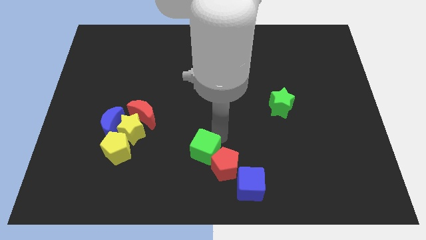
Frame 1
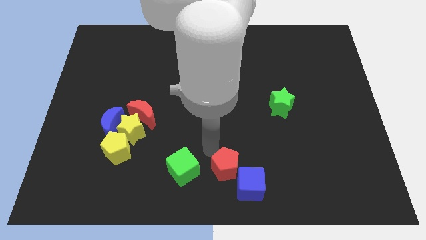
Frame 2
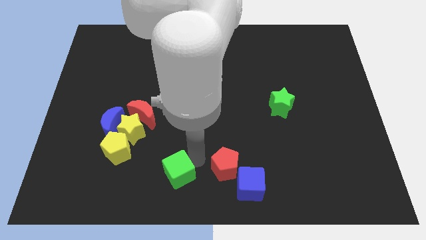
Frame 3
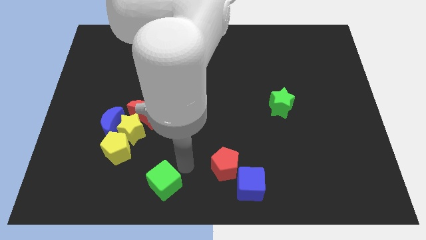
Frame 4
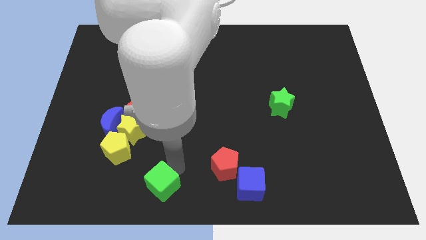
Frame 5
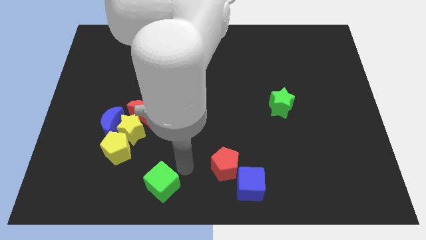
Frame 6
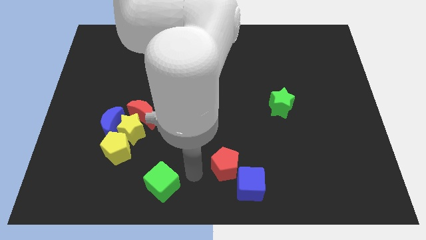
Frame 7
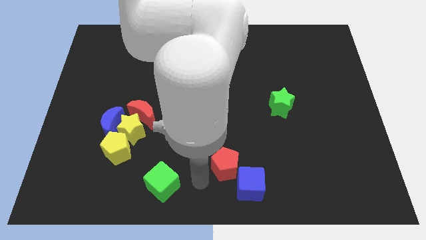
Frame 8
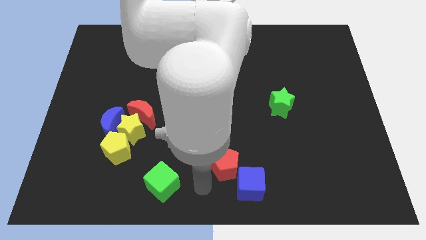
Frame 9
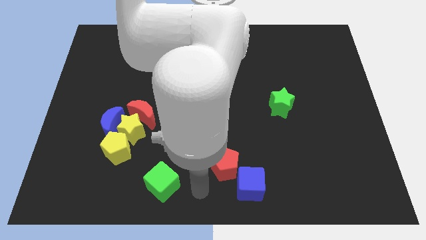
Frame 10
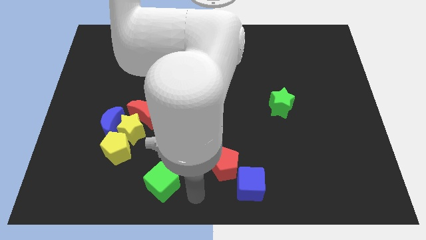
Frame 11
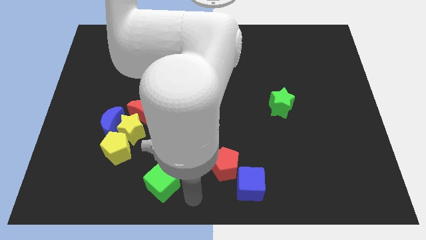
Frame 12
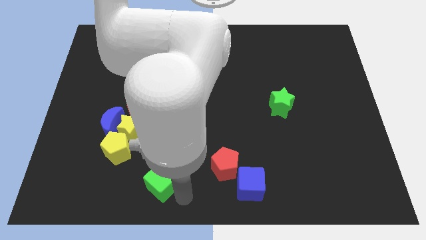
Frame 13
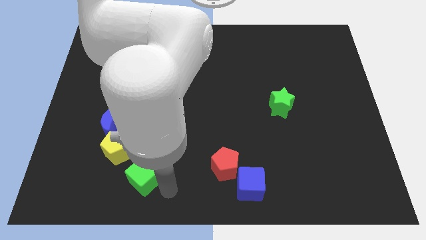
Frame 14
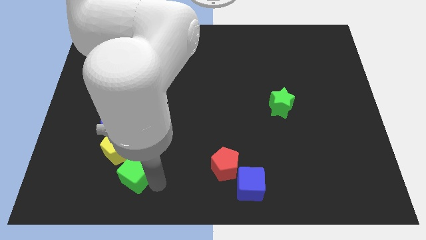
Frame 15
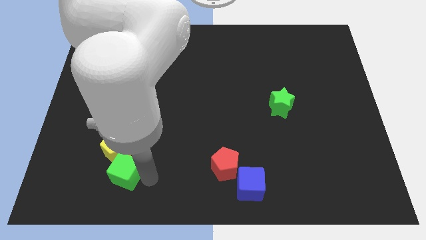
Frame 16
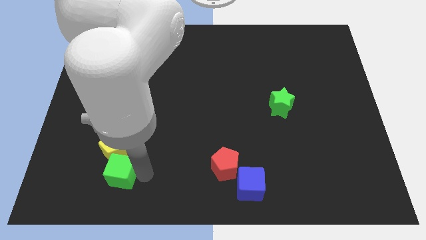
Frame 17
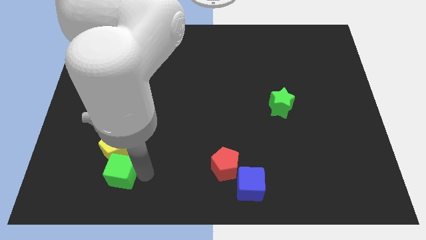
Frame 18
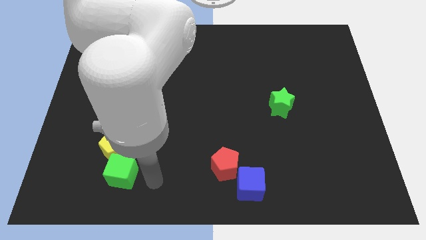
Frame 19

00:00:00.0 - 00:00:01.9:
place the green cube to the bottom of the yellow pentagon

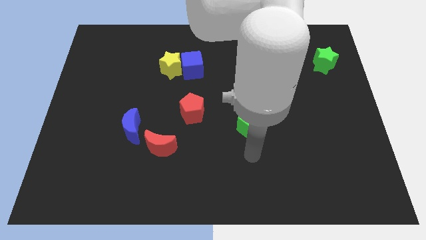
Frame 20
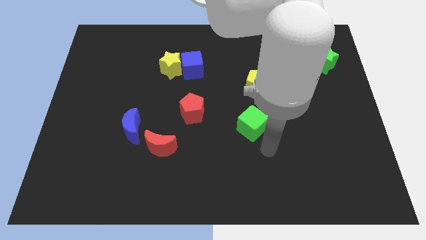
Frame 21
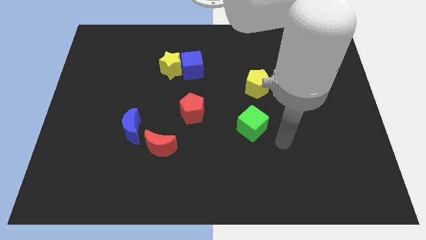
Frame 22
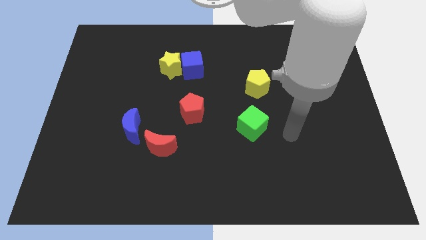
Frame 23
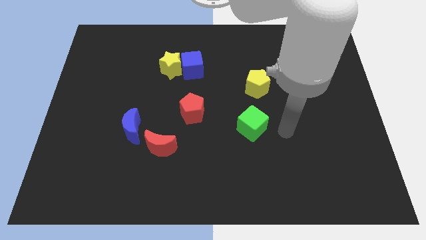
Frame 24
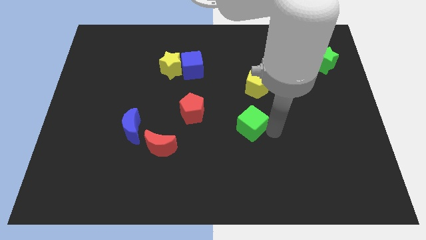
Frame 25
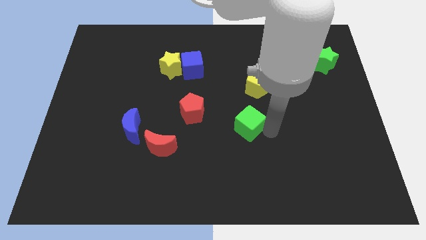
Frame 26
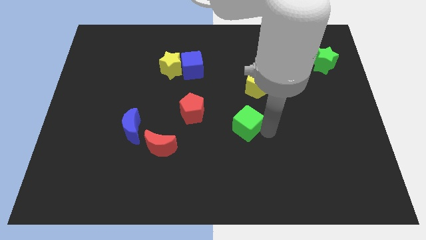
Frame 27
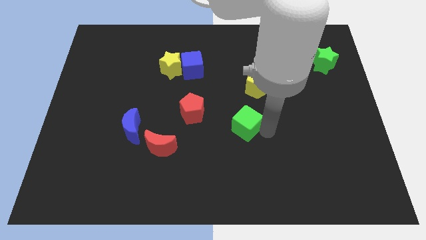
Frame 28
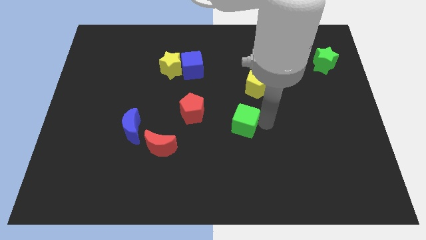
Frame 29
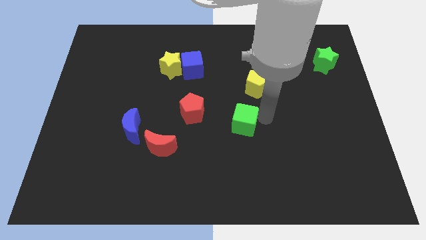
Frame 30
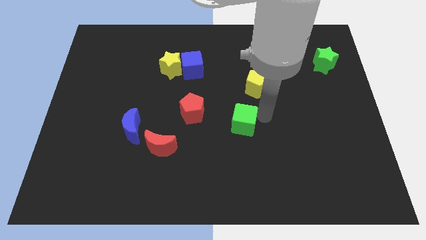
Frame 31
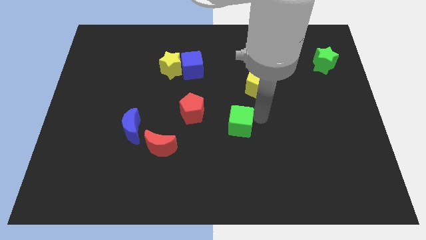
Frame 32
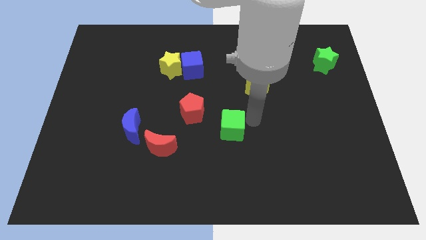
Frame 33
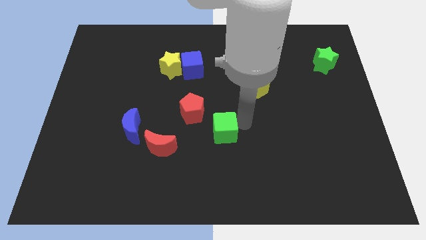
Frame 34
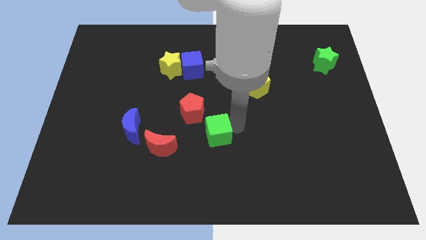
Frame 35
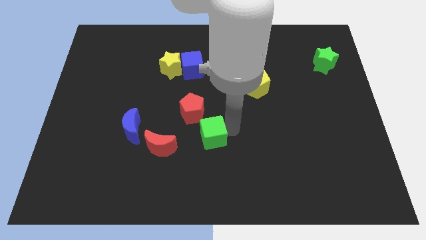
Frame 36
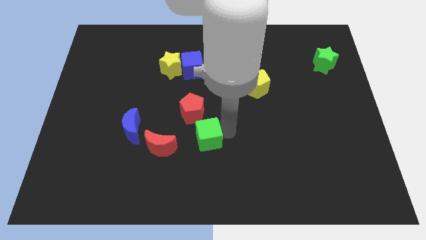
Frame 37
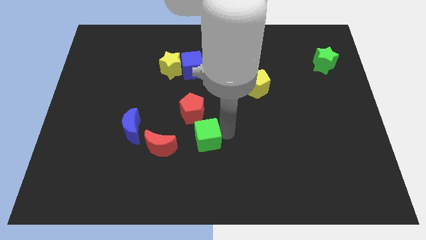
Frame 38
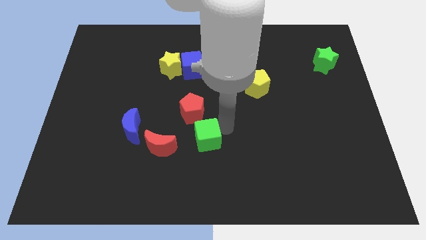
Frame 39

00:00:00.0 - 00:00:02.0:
push the green cube near to the red pentagon

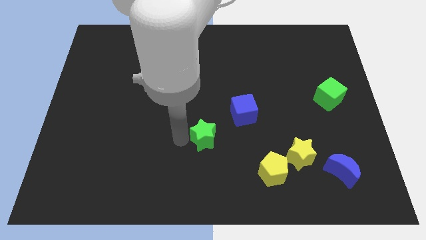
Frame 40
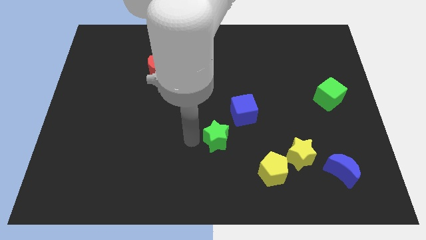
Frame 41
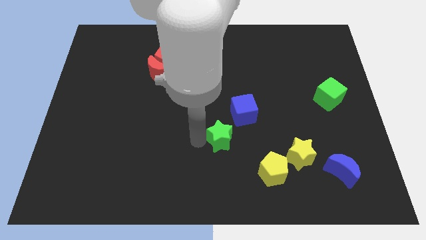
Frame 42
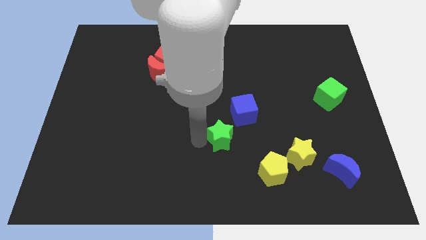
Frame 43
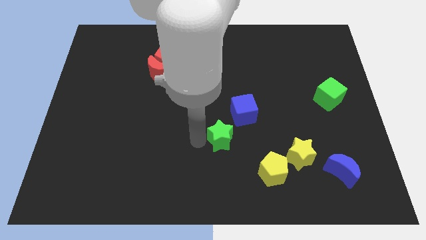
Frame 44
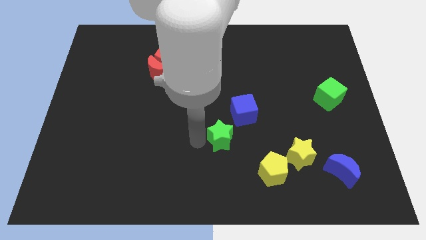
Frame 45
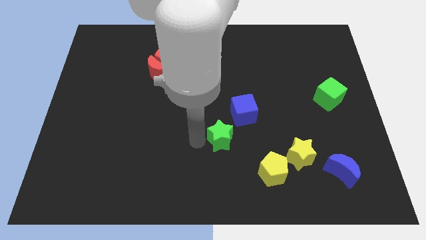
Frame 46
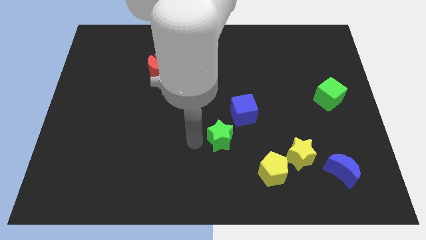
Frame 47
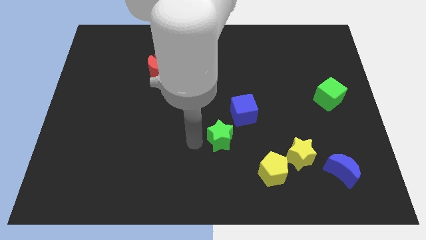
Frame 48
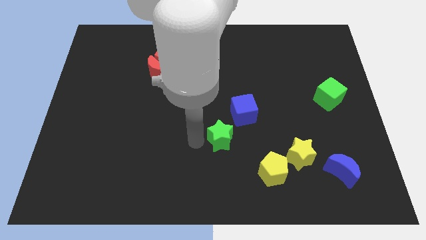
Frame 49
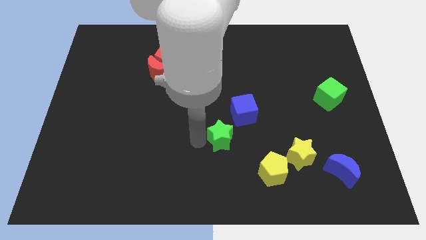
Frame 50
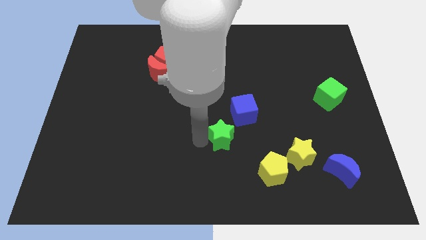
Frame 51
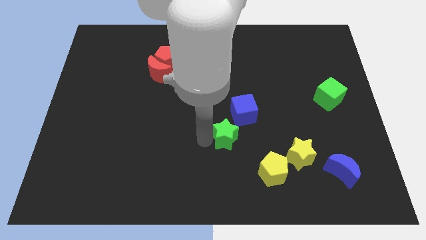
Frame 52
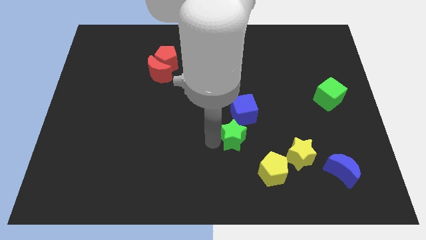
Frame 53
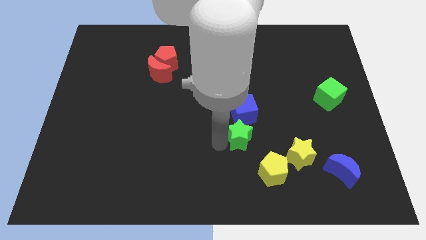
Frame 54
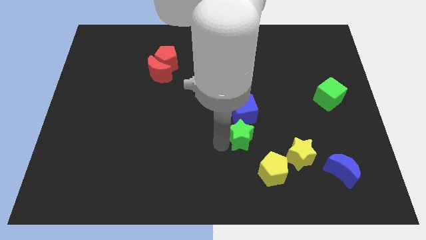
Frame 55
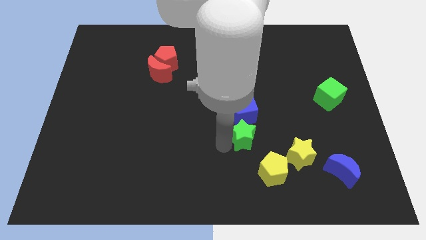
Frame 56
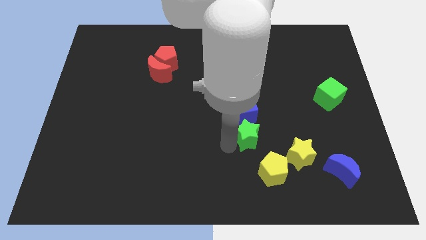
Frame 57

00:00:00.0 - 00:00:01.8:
place the green star vertically below the blue cube

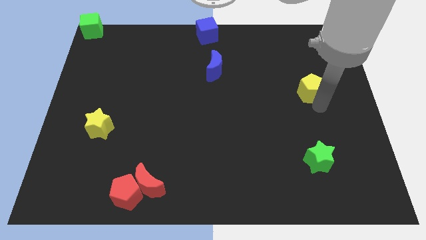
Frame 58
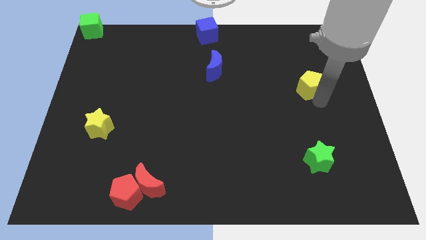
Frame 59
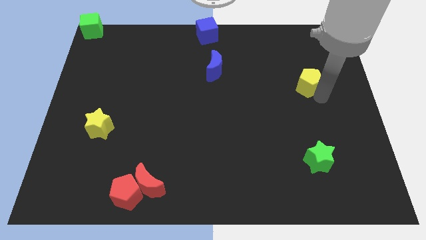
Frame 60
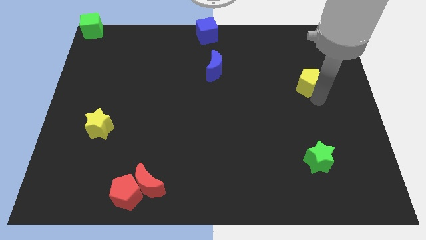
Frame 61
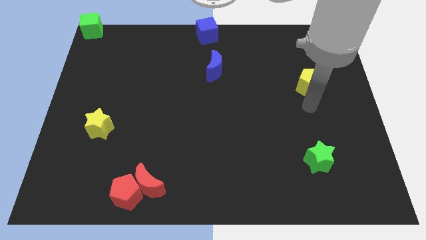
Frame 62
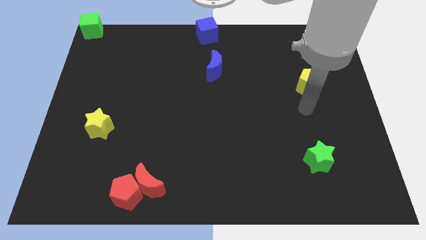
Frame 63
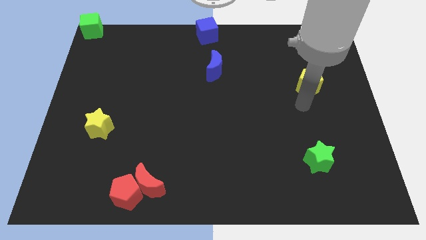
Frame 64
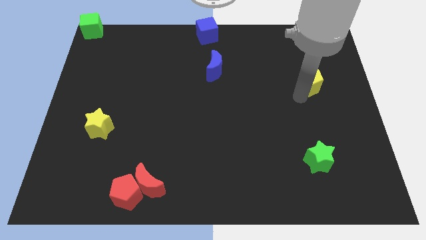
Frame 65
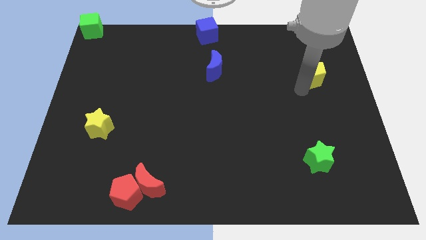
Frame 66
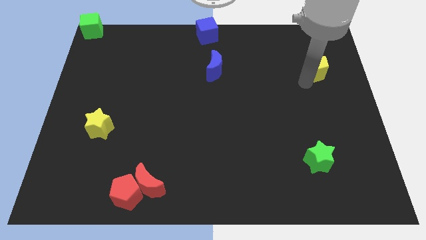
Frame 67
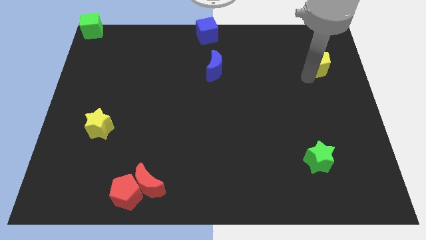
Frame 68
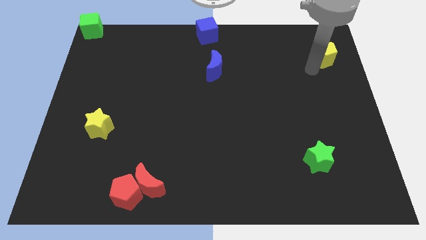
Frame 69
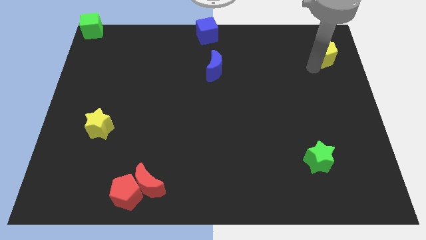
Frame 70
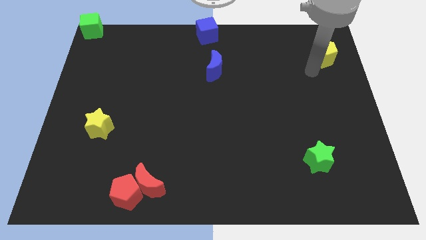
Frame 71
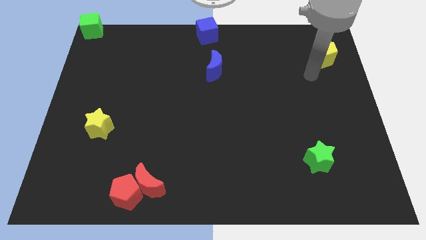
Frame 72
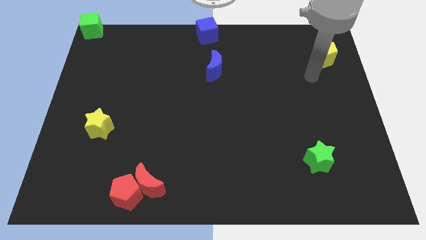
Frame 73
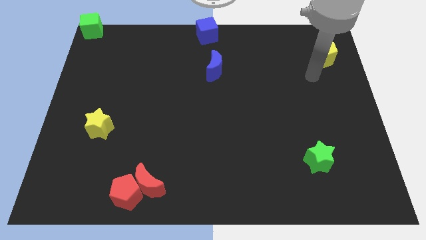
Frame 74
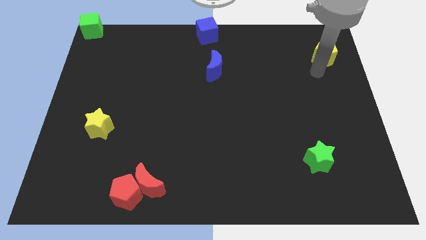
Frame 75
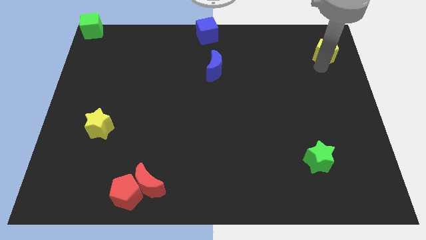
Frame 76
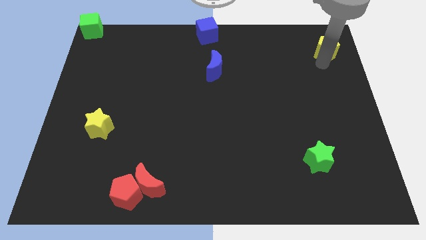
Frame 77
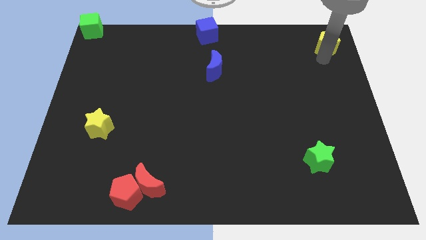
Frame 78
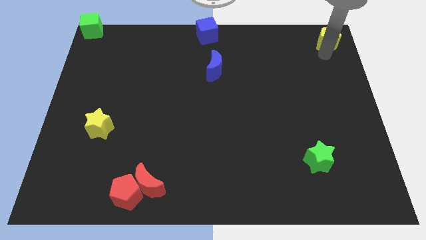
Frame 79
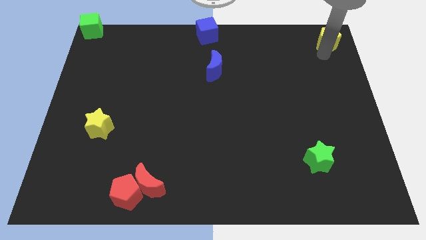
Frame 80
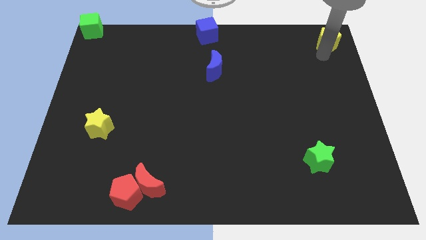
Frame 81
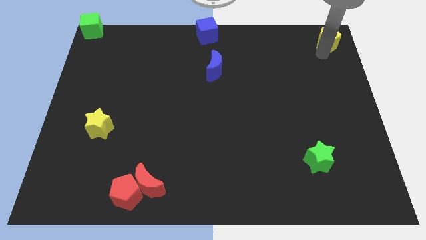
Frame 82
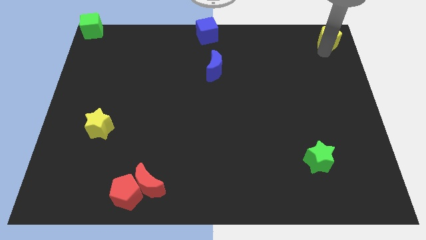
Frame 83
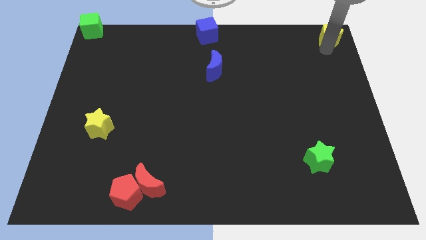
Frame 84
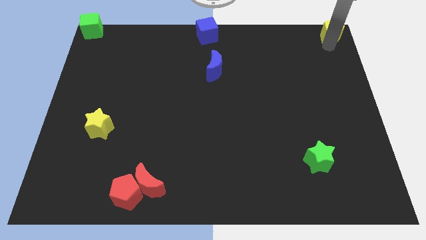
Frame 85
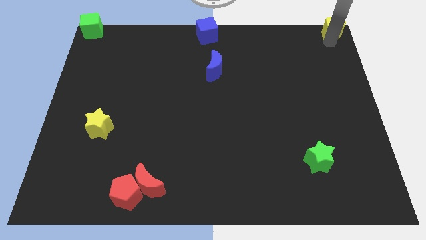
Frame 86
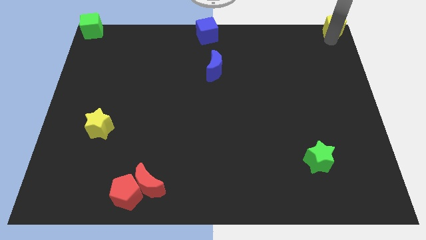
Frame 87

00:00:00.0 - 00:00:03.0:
push the yellow pentagon to the top right corner

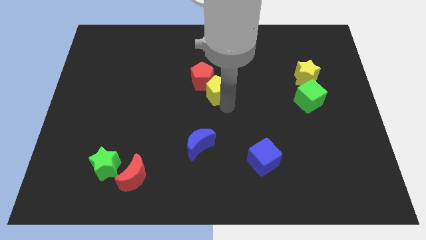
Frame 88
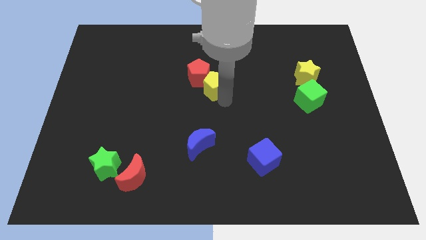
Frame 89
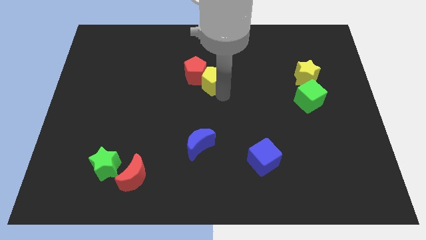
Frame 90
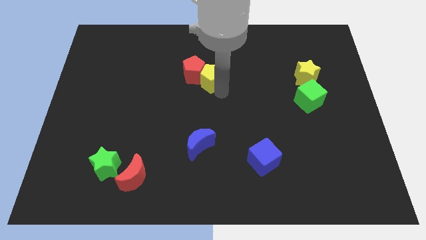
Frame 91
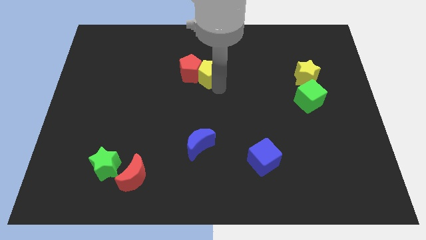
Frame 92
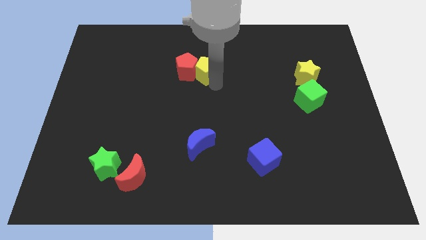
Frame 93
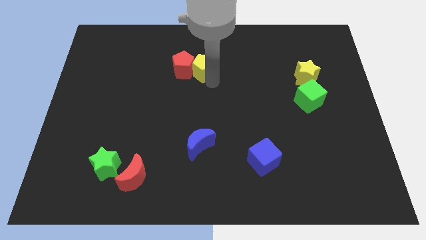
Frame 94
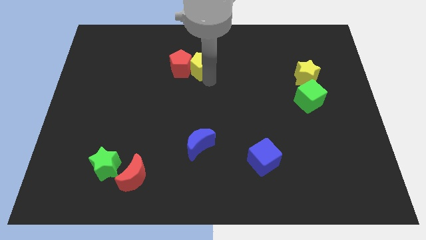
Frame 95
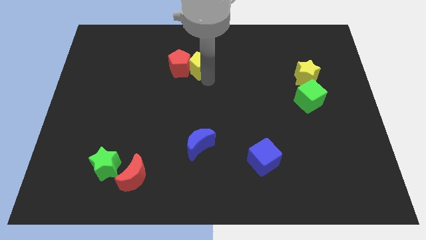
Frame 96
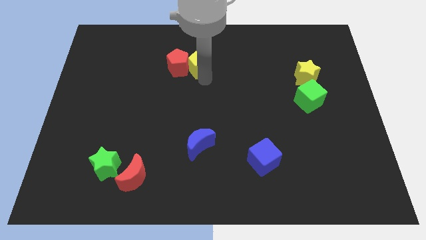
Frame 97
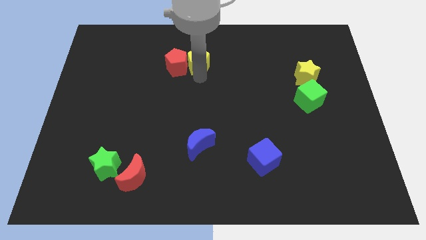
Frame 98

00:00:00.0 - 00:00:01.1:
move the yellow pentagon to the right of the red pentagon
